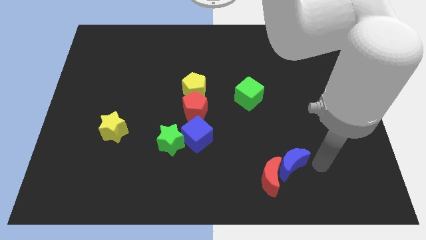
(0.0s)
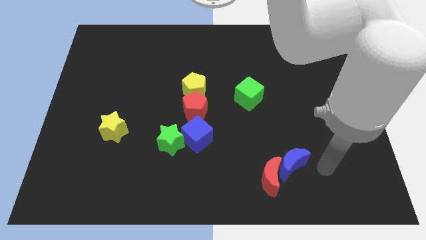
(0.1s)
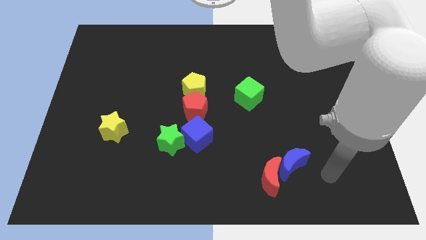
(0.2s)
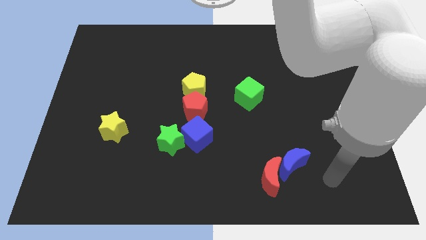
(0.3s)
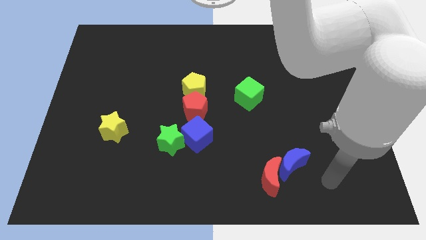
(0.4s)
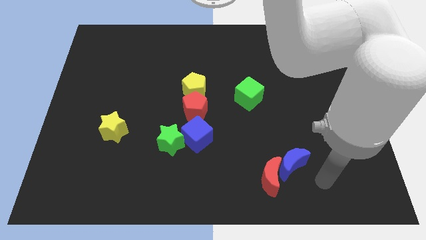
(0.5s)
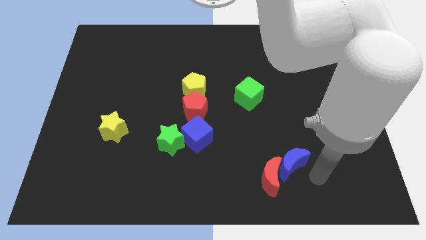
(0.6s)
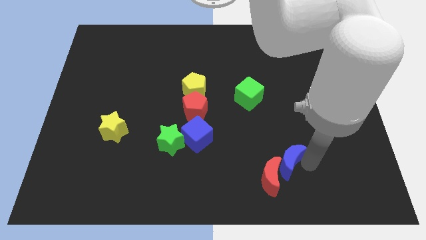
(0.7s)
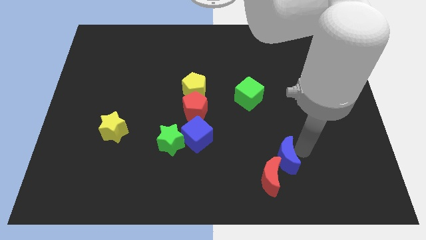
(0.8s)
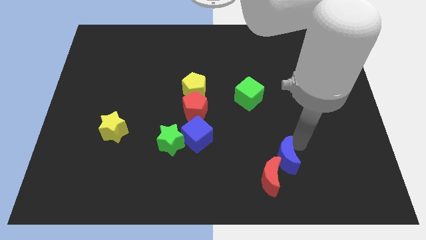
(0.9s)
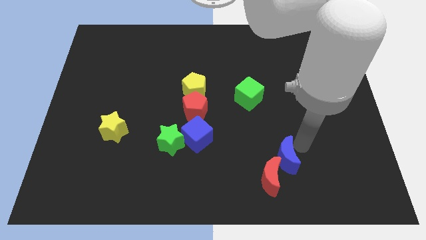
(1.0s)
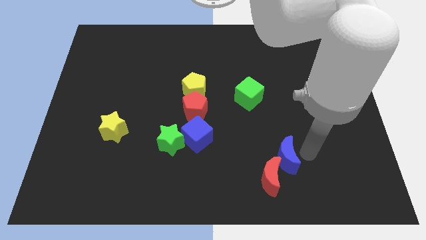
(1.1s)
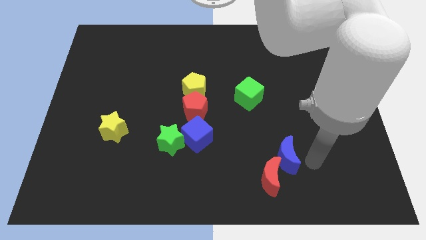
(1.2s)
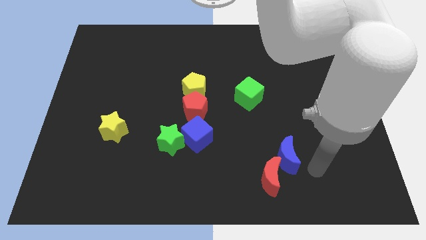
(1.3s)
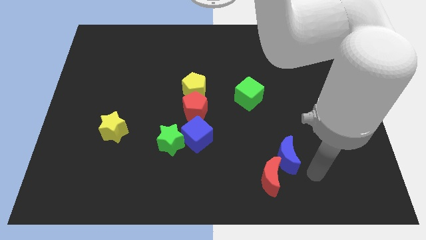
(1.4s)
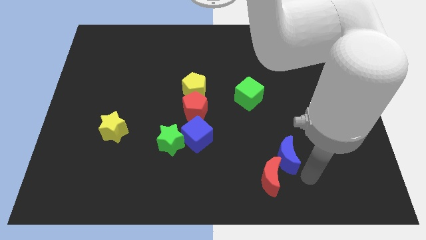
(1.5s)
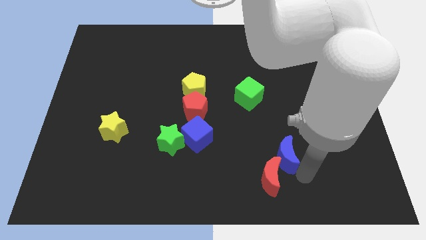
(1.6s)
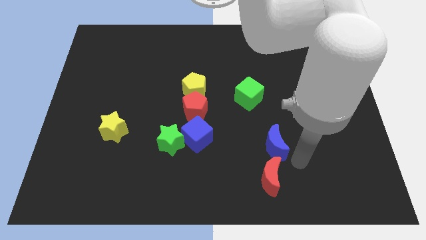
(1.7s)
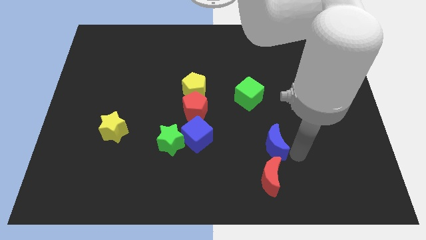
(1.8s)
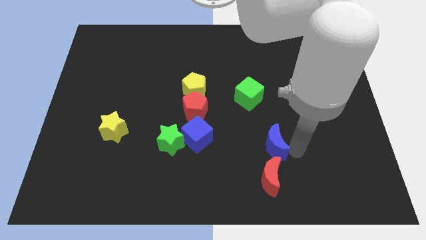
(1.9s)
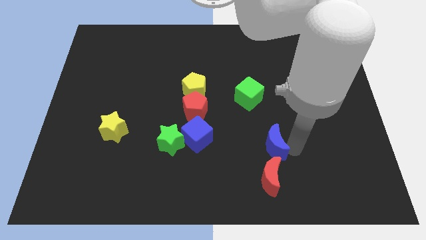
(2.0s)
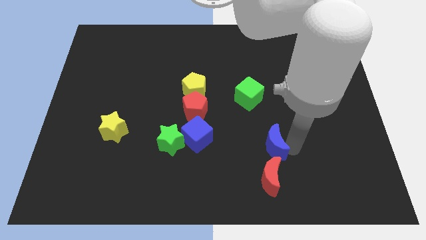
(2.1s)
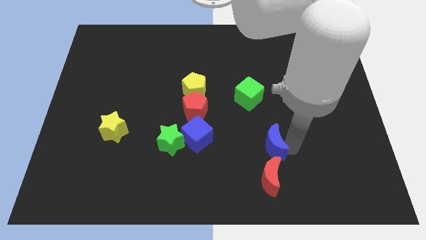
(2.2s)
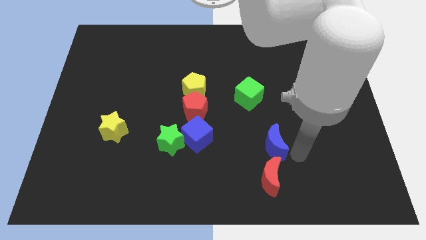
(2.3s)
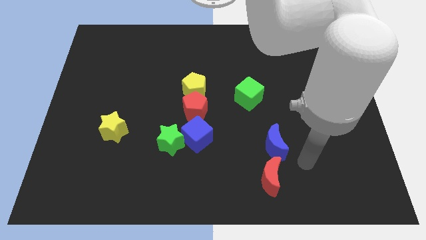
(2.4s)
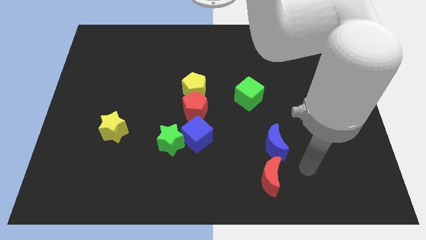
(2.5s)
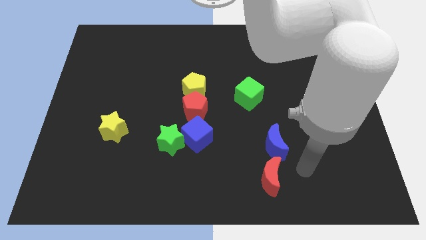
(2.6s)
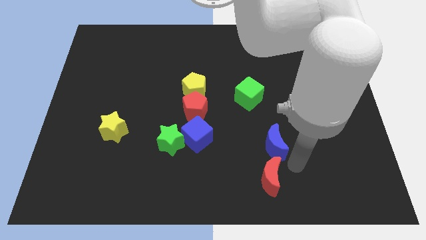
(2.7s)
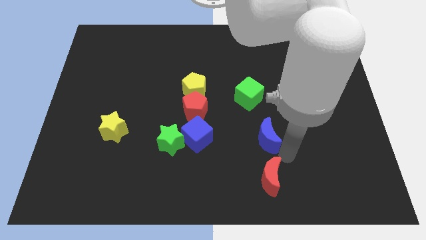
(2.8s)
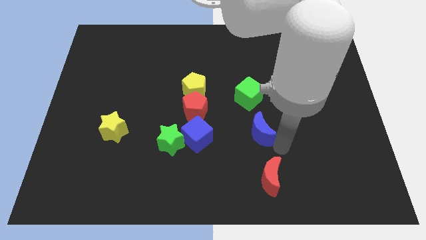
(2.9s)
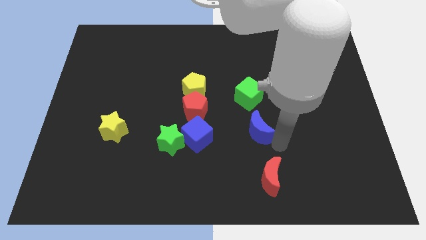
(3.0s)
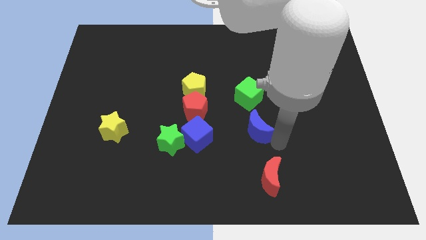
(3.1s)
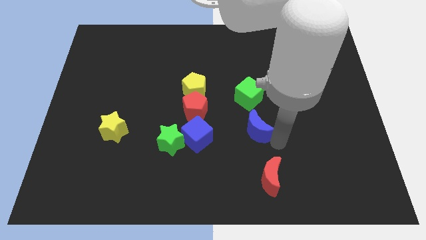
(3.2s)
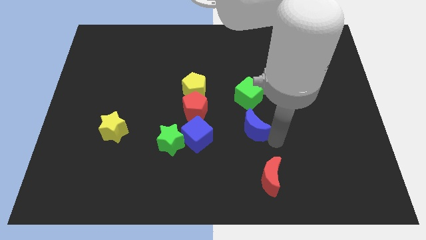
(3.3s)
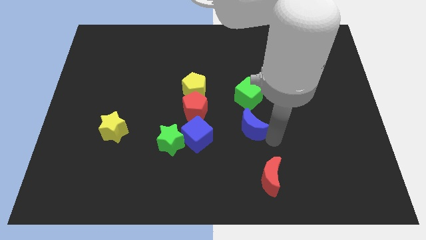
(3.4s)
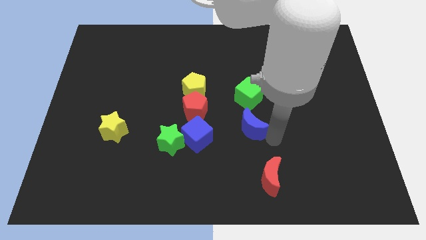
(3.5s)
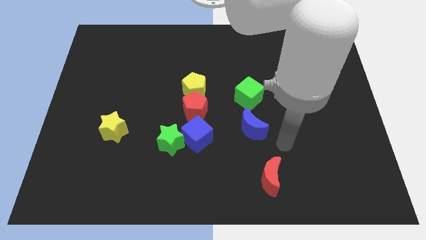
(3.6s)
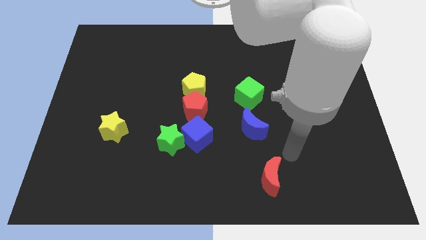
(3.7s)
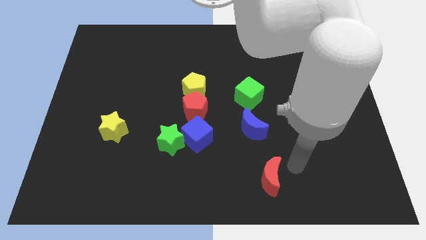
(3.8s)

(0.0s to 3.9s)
place the blue moon in between the green cube and red moon

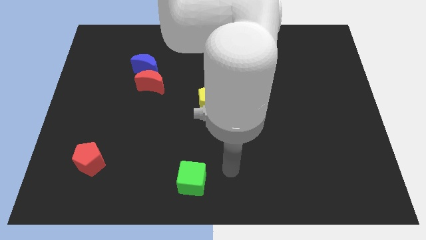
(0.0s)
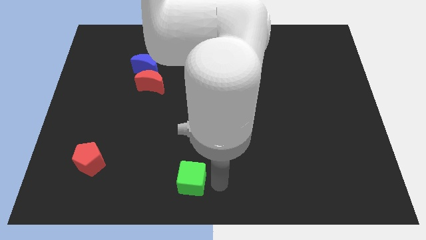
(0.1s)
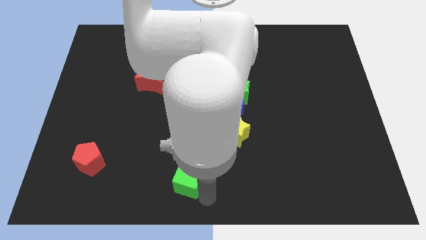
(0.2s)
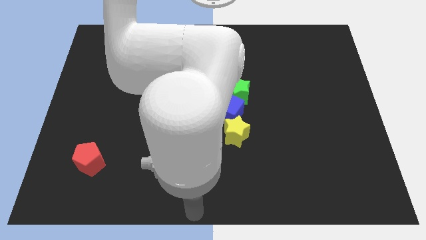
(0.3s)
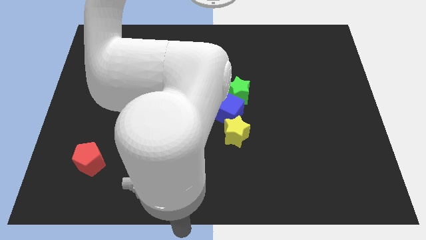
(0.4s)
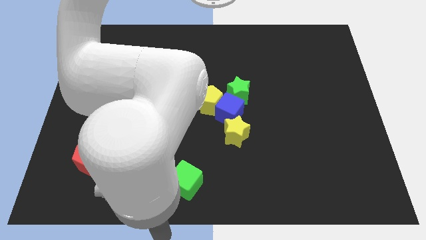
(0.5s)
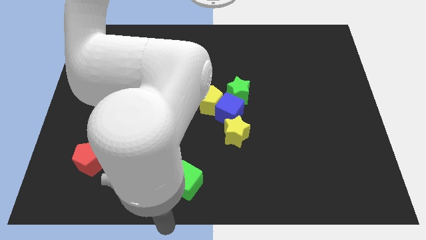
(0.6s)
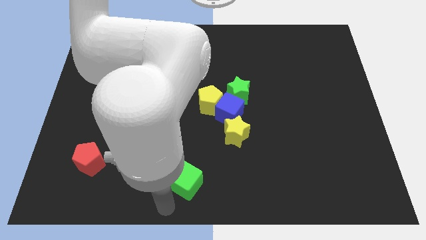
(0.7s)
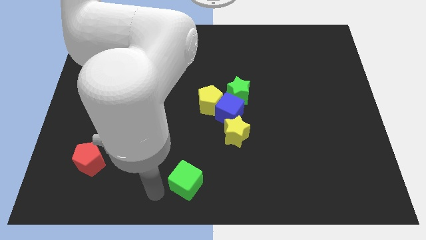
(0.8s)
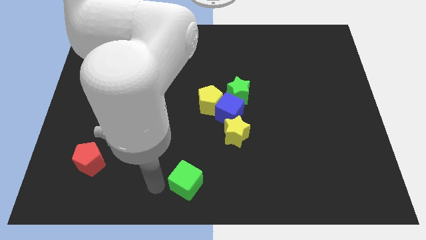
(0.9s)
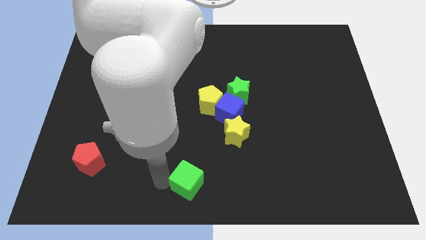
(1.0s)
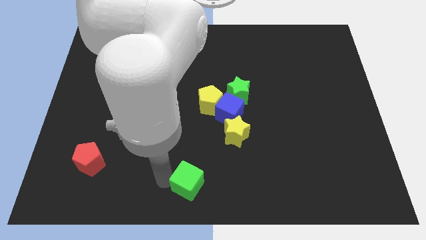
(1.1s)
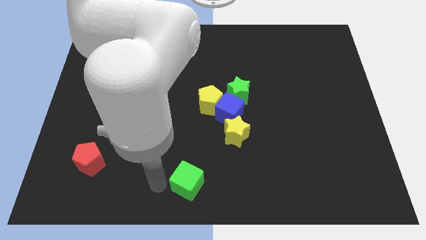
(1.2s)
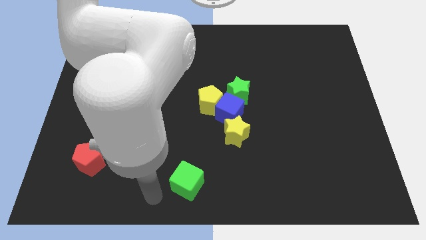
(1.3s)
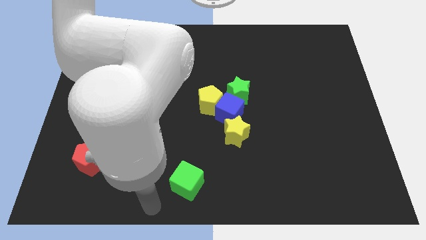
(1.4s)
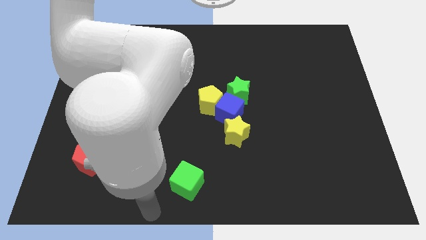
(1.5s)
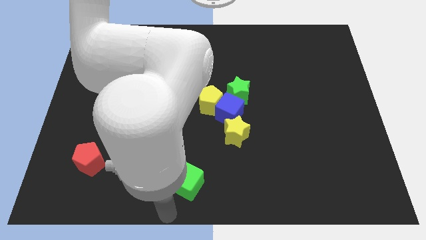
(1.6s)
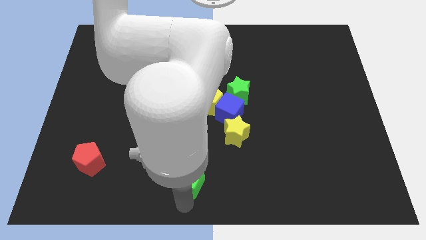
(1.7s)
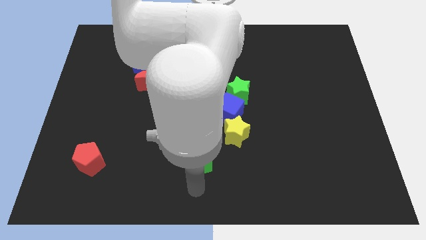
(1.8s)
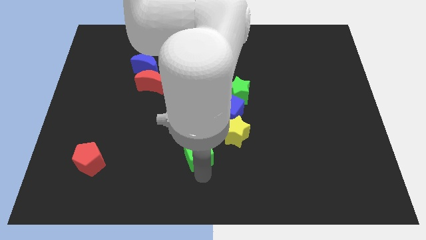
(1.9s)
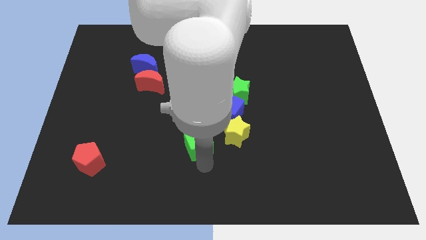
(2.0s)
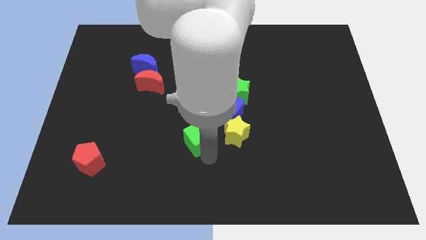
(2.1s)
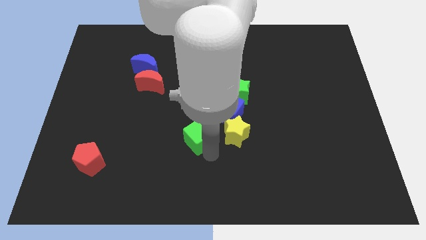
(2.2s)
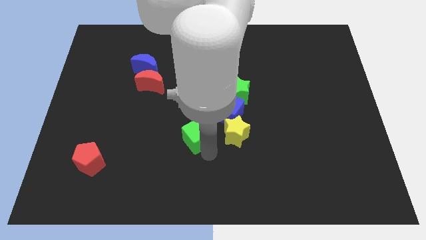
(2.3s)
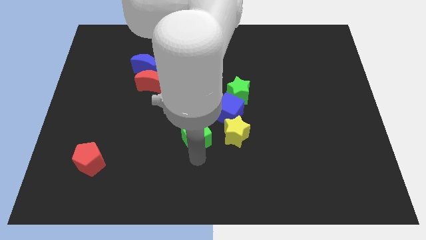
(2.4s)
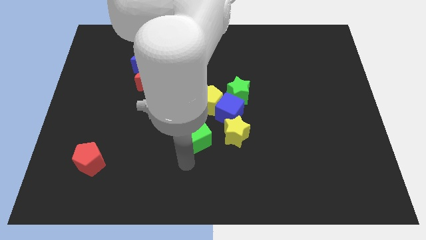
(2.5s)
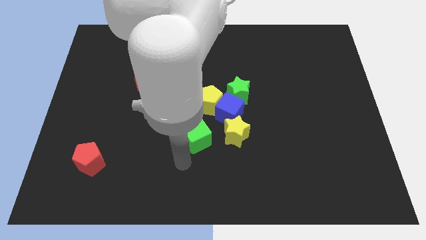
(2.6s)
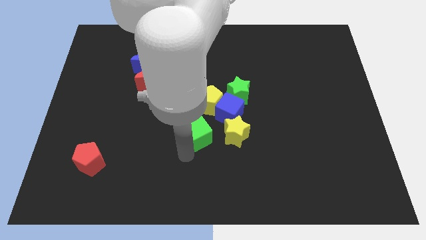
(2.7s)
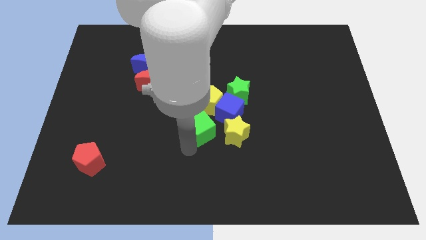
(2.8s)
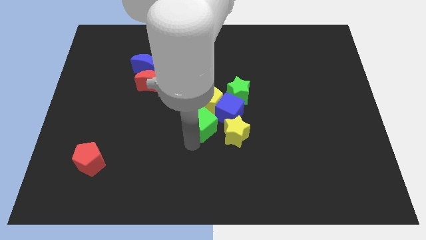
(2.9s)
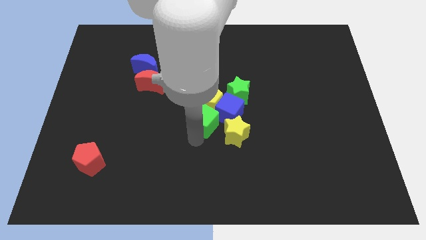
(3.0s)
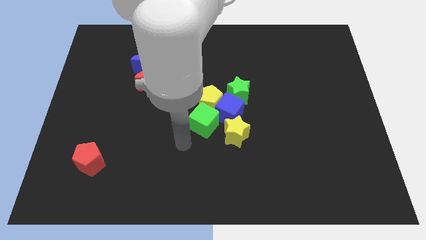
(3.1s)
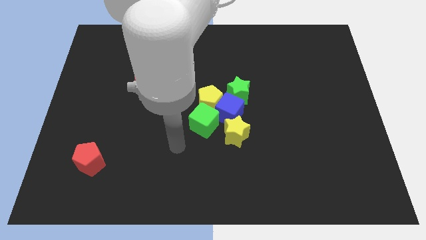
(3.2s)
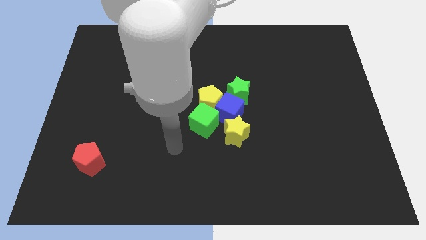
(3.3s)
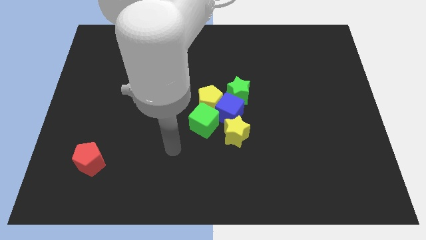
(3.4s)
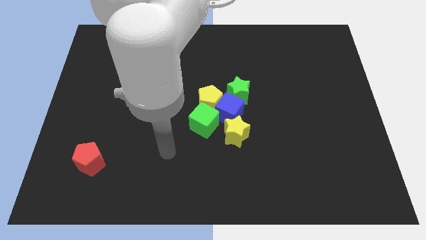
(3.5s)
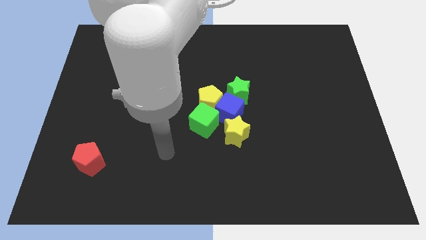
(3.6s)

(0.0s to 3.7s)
move the green cube towards the blue cube

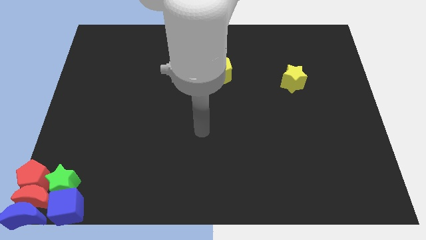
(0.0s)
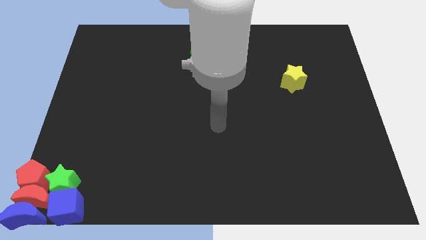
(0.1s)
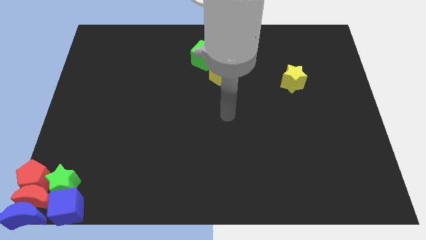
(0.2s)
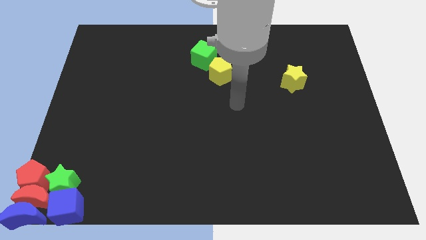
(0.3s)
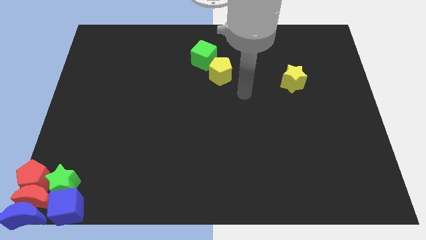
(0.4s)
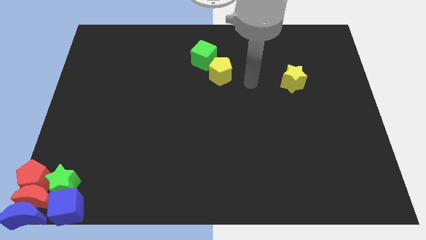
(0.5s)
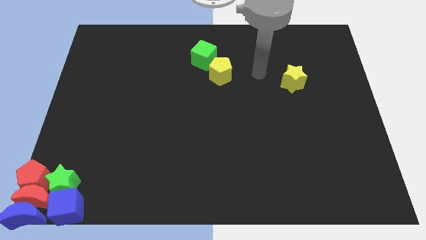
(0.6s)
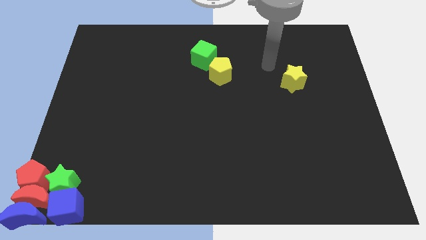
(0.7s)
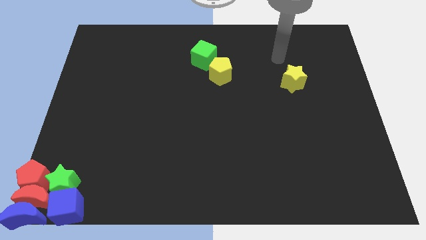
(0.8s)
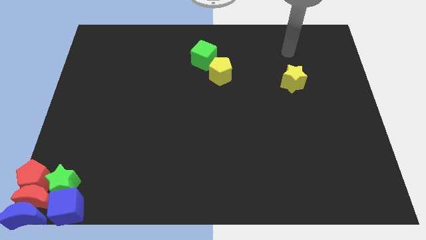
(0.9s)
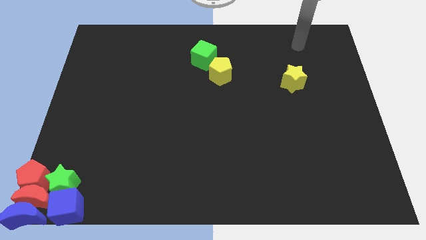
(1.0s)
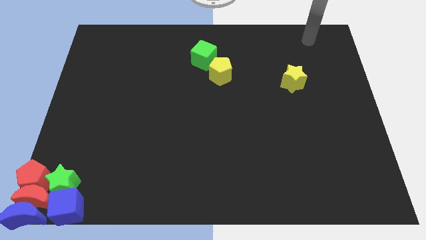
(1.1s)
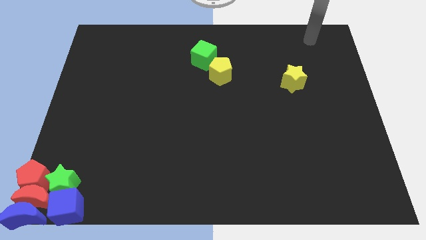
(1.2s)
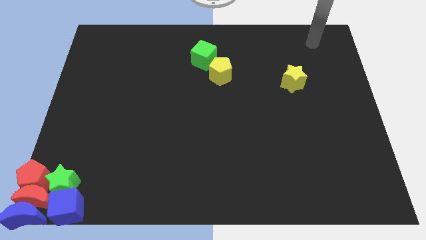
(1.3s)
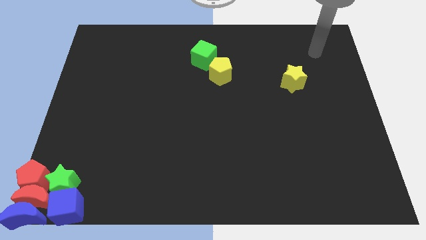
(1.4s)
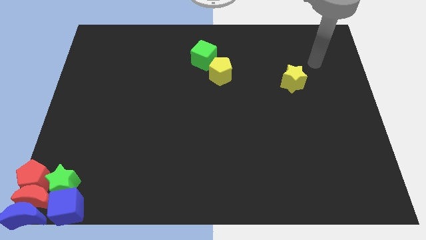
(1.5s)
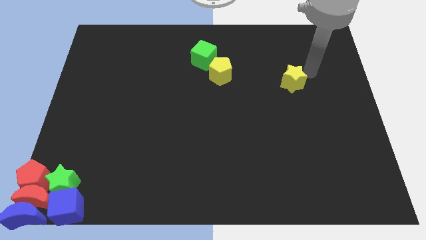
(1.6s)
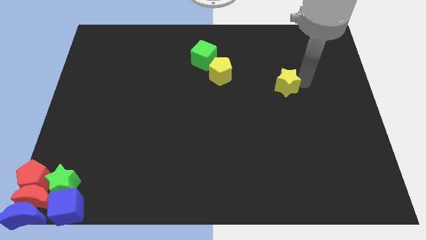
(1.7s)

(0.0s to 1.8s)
move your hand towards the right of the yellow star
